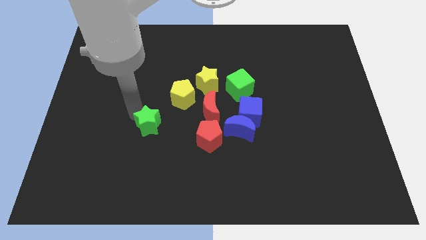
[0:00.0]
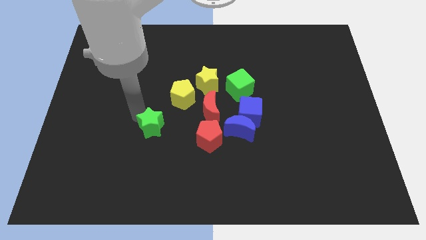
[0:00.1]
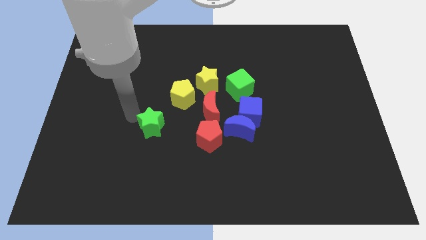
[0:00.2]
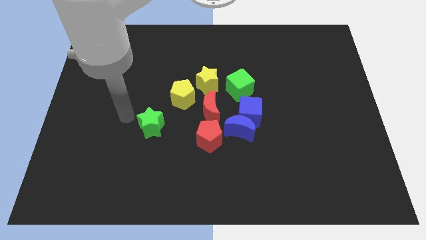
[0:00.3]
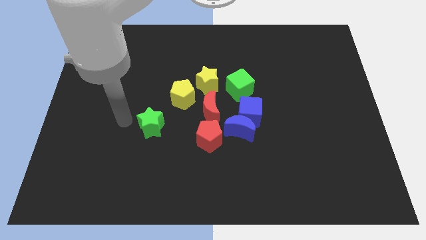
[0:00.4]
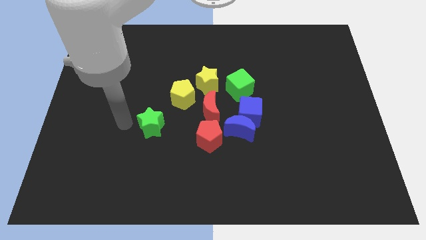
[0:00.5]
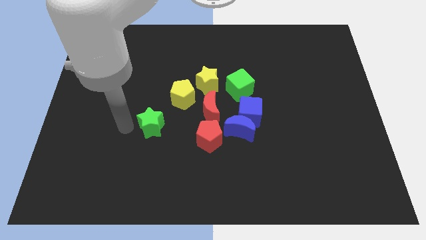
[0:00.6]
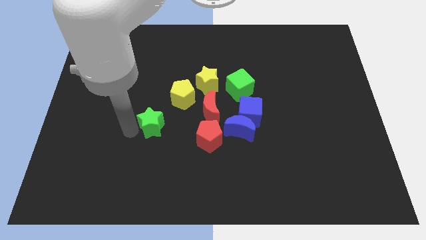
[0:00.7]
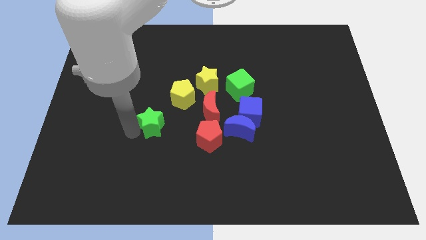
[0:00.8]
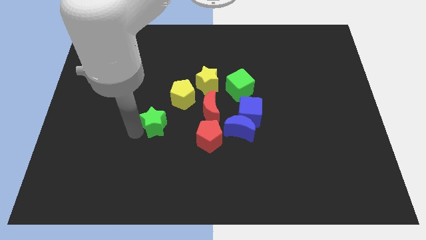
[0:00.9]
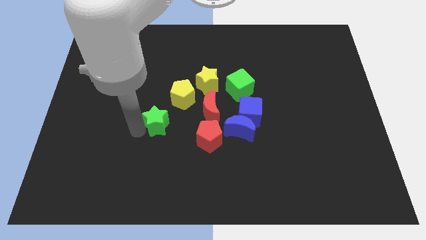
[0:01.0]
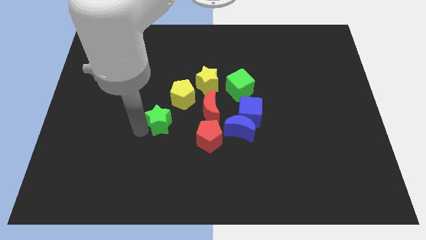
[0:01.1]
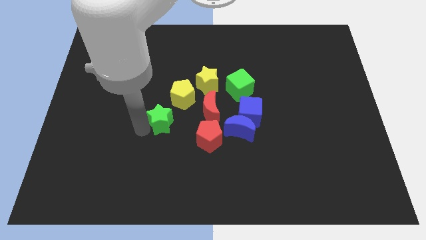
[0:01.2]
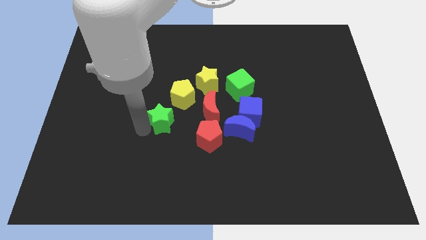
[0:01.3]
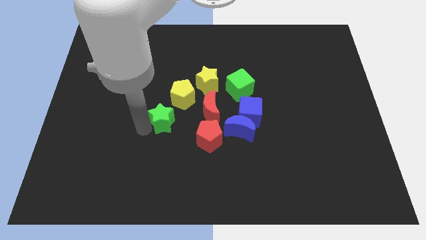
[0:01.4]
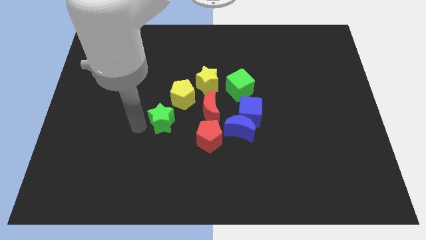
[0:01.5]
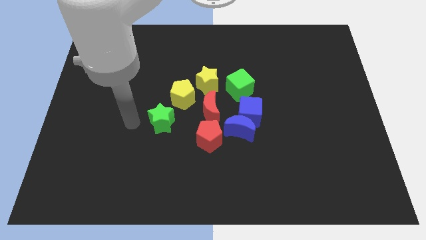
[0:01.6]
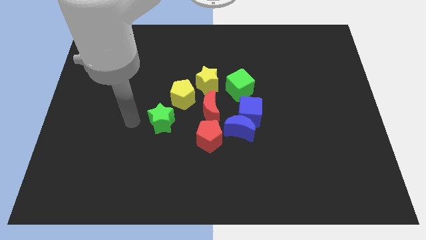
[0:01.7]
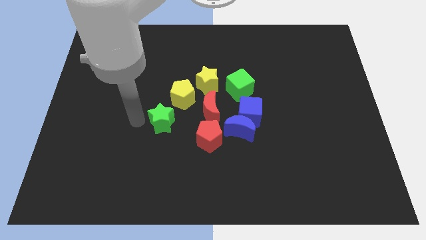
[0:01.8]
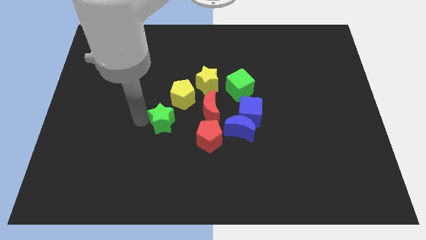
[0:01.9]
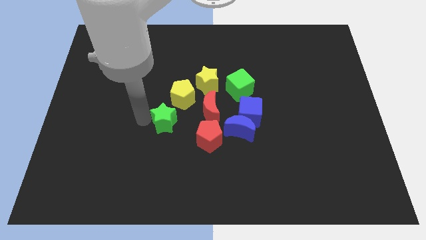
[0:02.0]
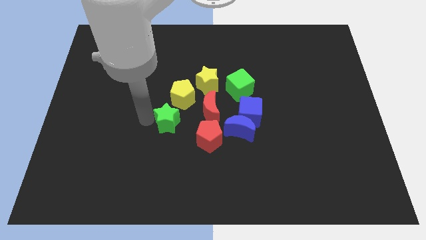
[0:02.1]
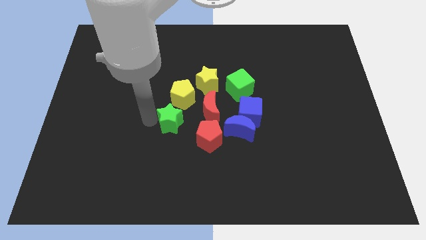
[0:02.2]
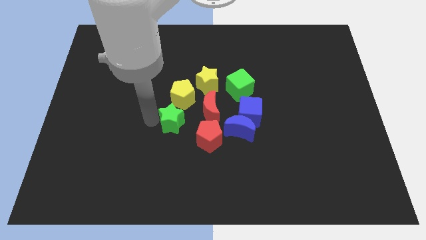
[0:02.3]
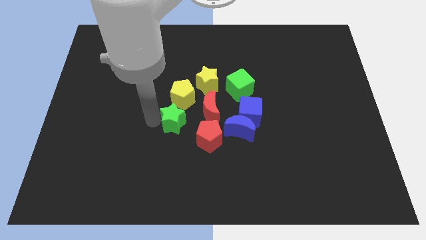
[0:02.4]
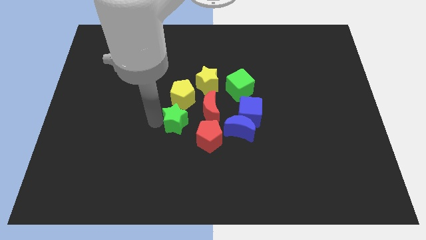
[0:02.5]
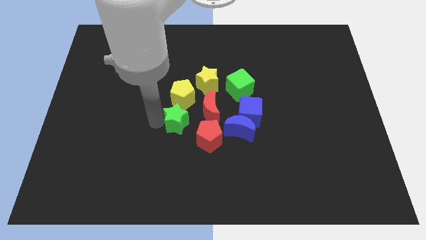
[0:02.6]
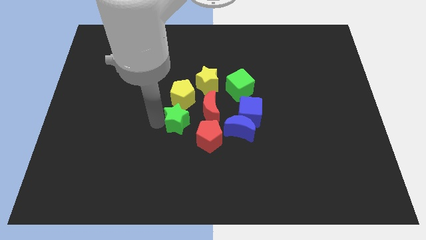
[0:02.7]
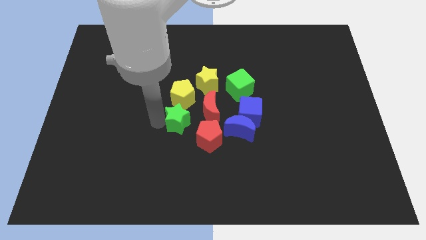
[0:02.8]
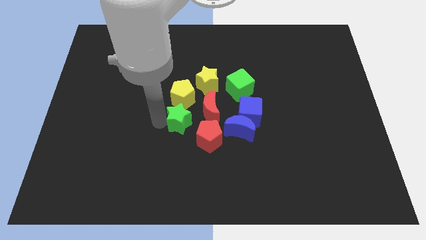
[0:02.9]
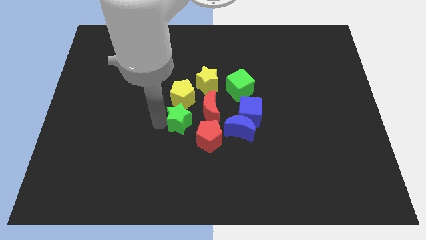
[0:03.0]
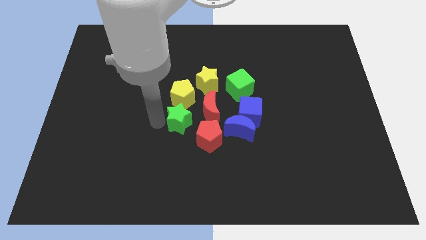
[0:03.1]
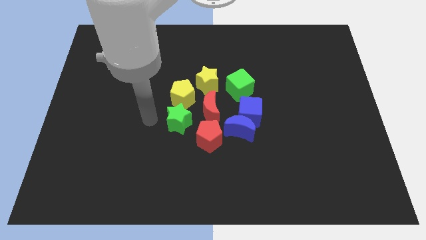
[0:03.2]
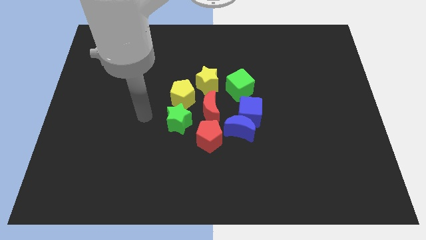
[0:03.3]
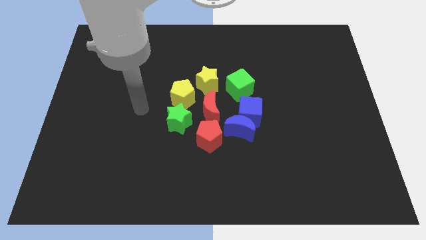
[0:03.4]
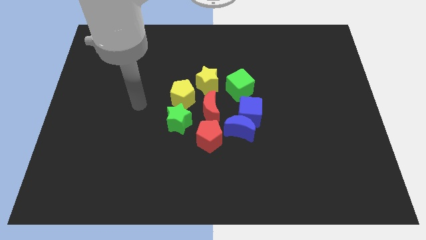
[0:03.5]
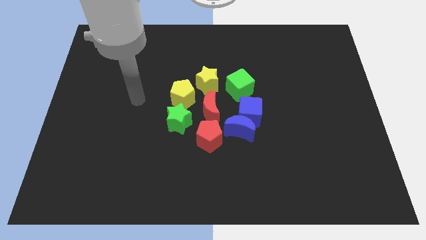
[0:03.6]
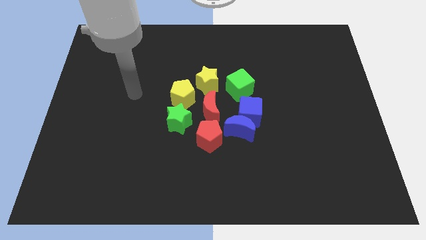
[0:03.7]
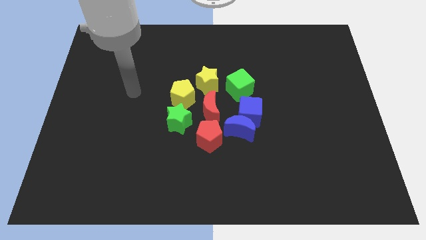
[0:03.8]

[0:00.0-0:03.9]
push green star to the bottom of yellow pentagon

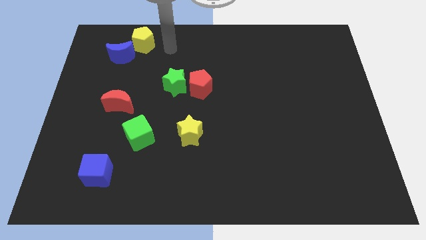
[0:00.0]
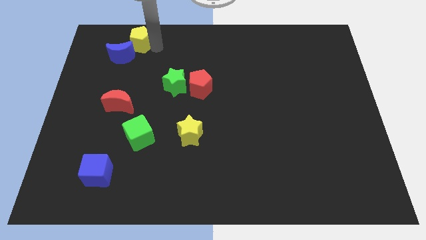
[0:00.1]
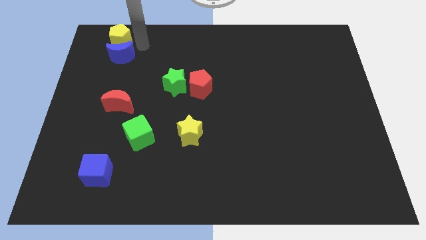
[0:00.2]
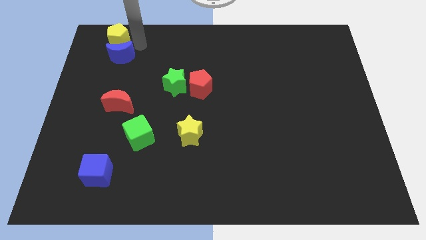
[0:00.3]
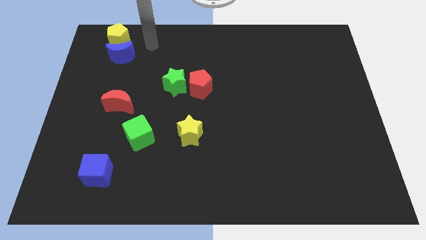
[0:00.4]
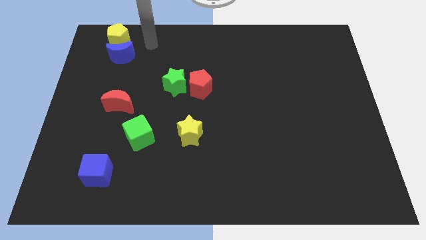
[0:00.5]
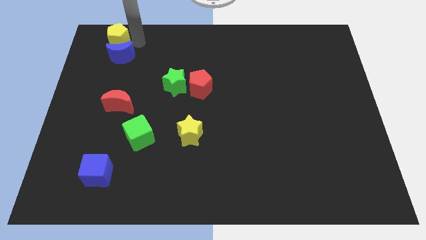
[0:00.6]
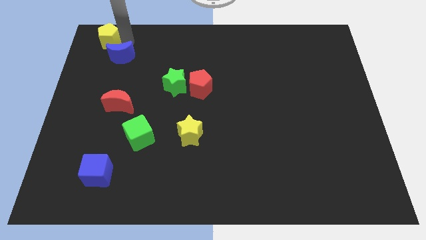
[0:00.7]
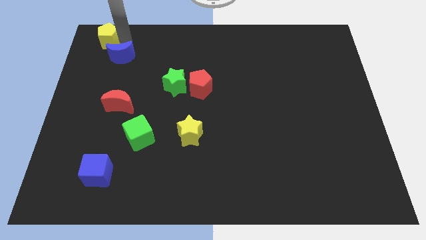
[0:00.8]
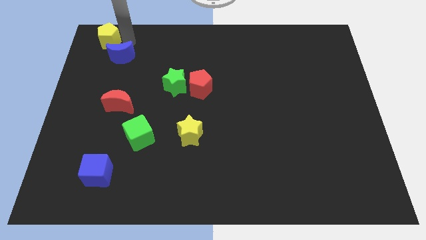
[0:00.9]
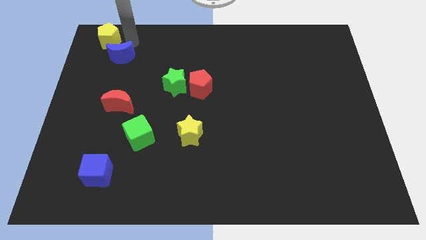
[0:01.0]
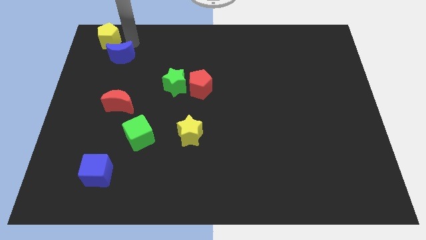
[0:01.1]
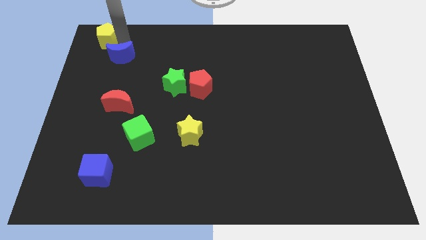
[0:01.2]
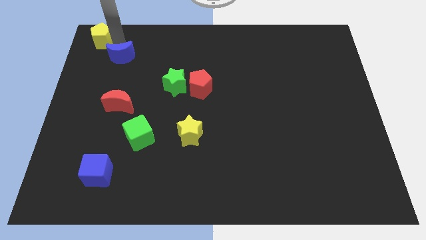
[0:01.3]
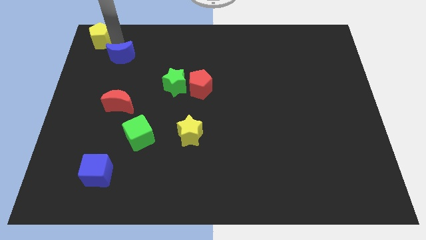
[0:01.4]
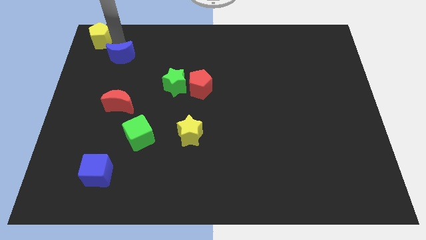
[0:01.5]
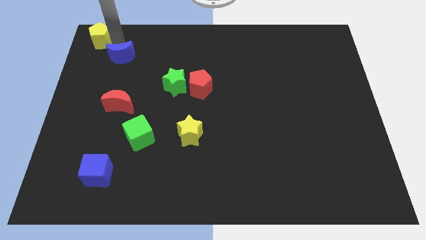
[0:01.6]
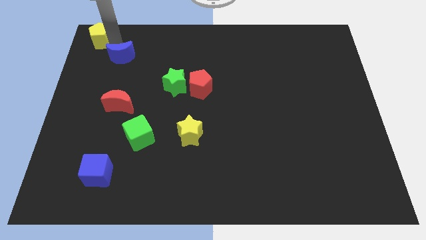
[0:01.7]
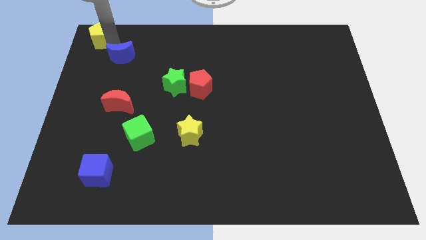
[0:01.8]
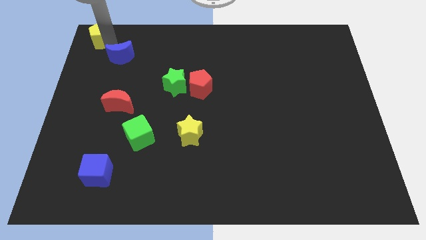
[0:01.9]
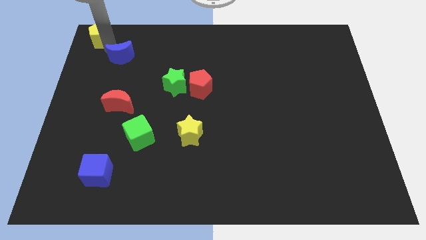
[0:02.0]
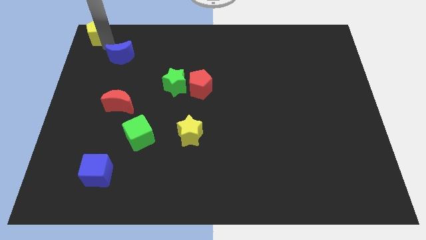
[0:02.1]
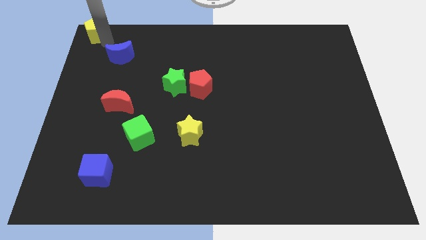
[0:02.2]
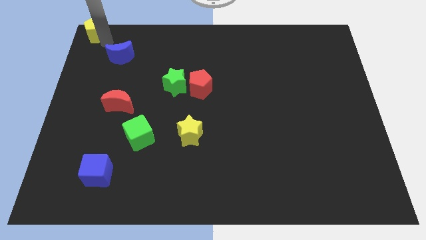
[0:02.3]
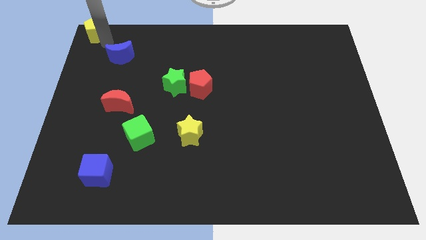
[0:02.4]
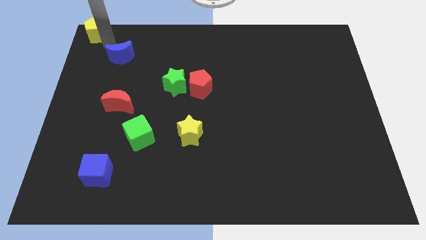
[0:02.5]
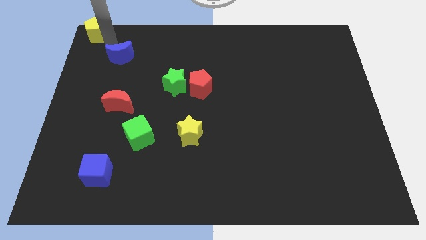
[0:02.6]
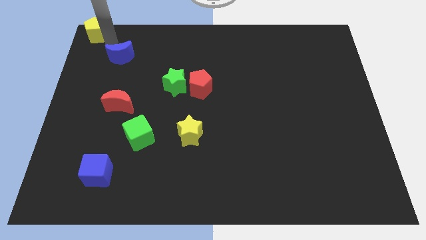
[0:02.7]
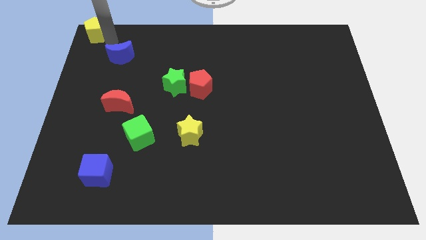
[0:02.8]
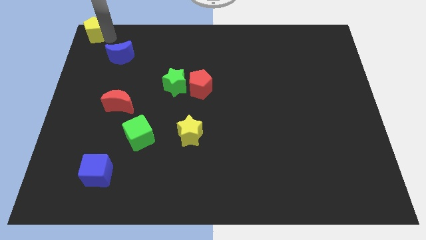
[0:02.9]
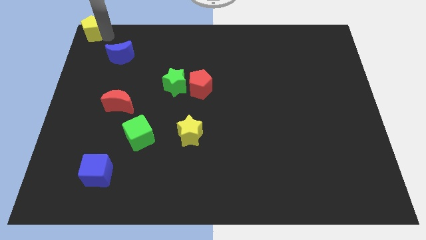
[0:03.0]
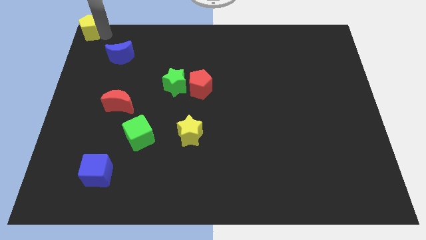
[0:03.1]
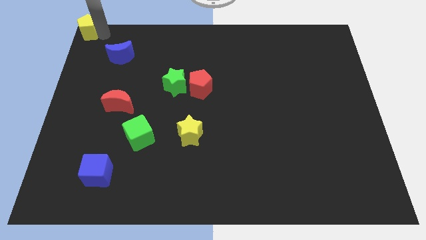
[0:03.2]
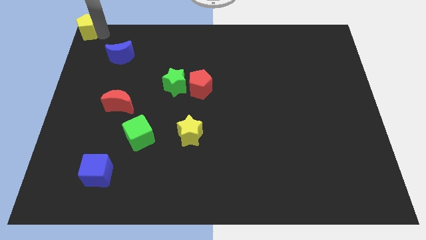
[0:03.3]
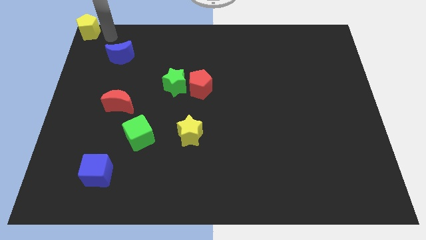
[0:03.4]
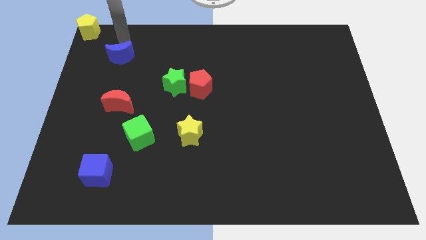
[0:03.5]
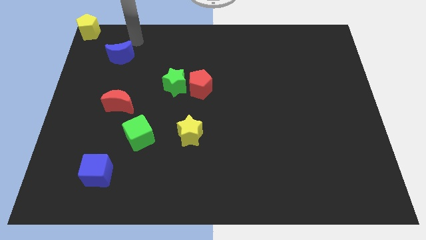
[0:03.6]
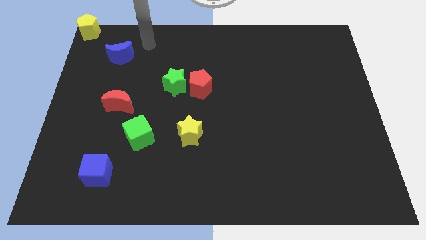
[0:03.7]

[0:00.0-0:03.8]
move the yellow pentagon to the top left corner of the board

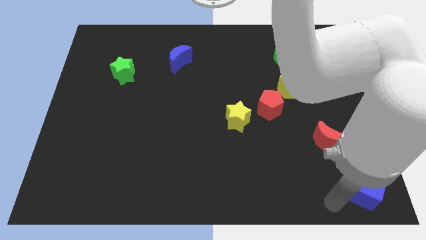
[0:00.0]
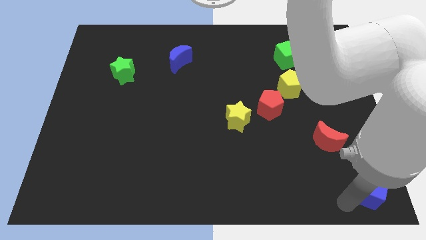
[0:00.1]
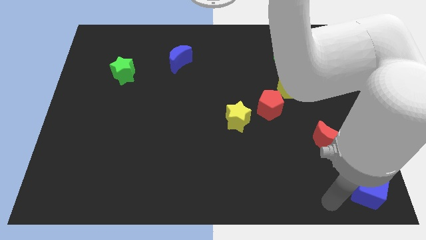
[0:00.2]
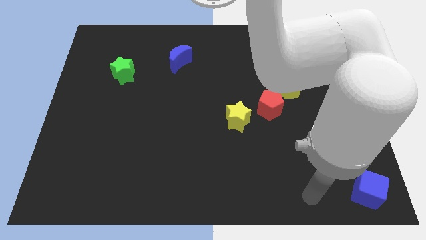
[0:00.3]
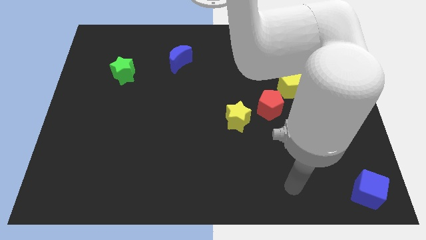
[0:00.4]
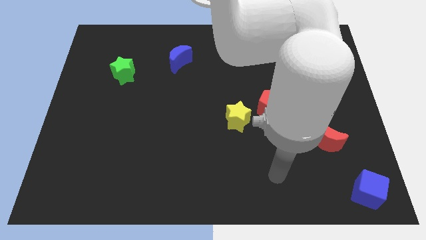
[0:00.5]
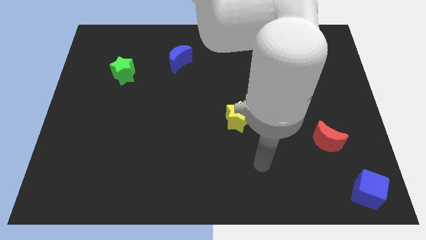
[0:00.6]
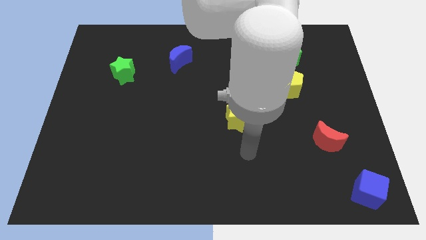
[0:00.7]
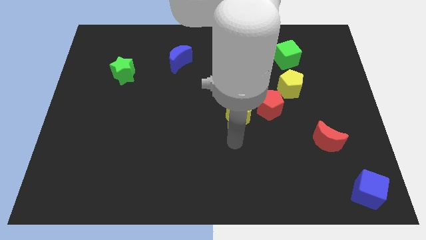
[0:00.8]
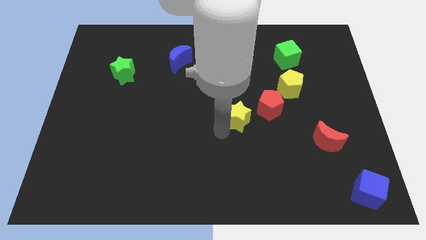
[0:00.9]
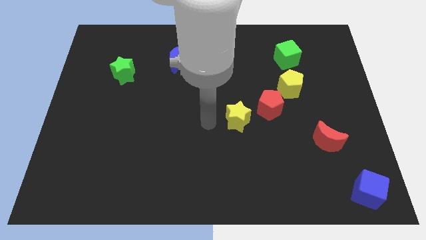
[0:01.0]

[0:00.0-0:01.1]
place your arm at the center of the board

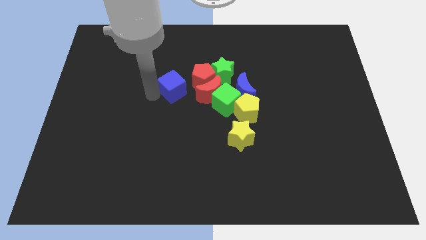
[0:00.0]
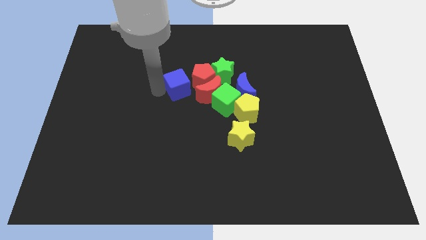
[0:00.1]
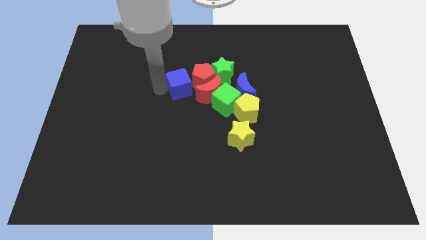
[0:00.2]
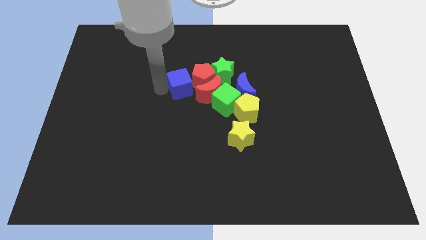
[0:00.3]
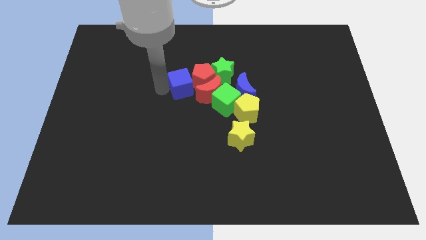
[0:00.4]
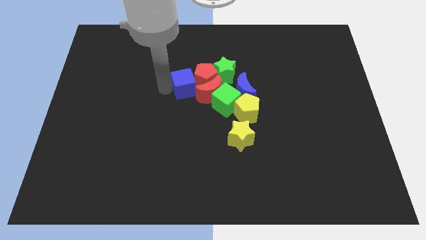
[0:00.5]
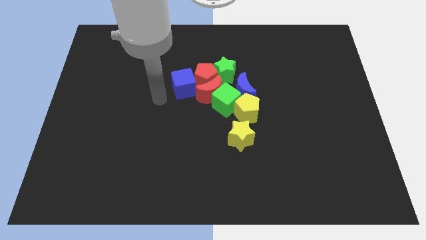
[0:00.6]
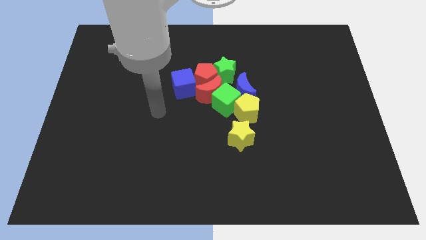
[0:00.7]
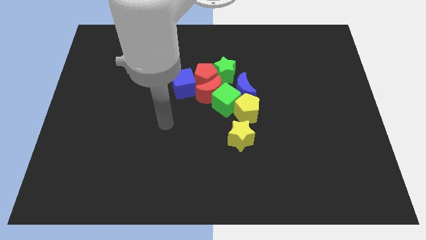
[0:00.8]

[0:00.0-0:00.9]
place the blue cube left to the red pentagon to form a diagnoal line
